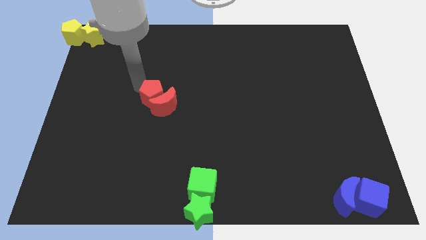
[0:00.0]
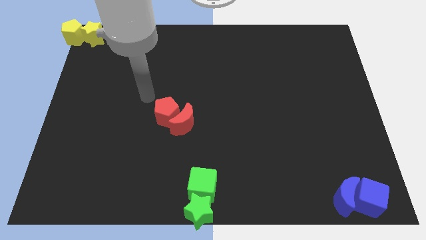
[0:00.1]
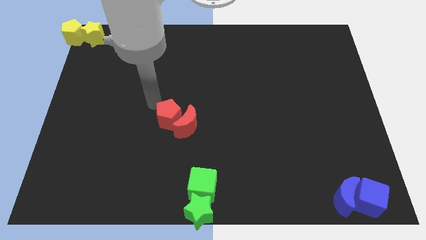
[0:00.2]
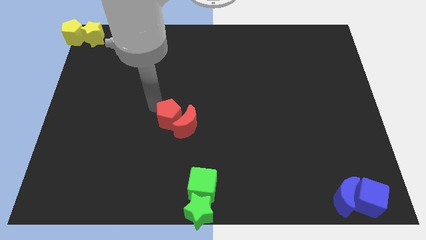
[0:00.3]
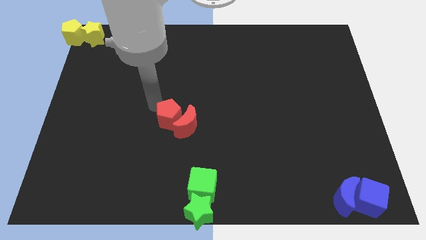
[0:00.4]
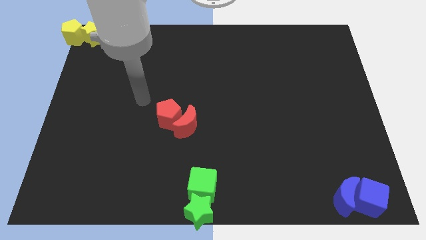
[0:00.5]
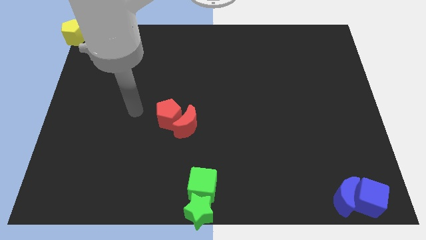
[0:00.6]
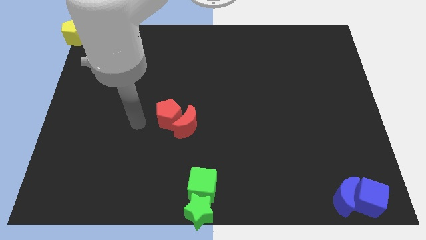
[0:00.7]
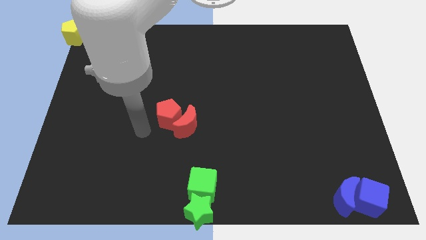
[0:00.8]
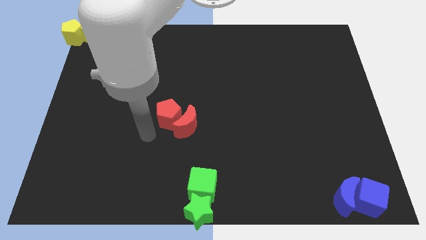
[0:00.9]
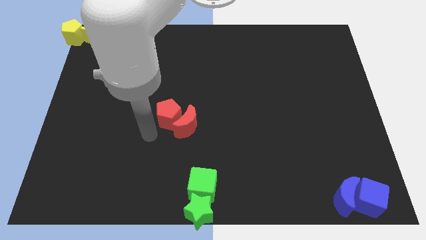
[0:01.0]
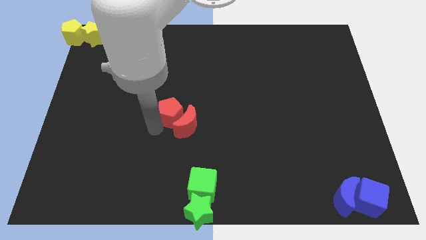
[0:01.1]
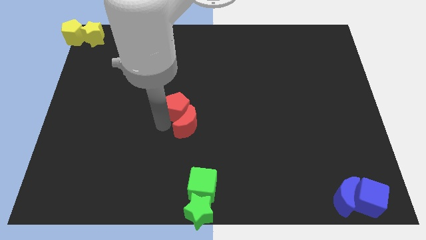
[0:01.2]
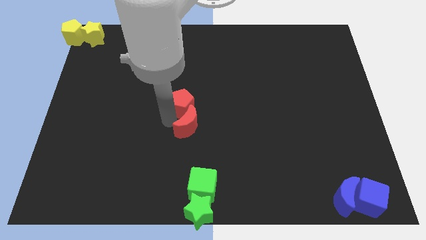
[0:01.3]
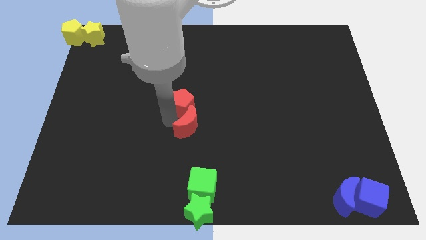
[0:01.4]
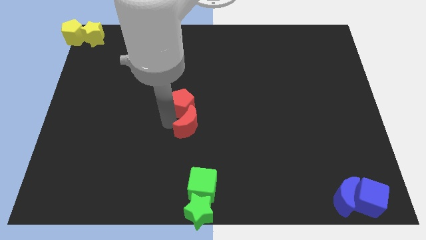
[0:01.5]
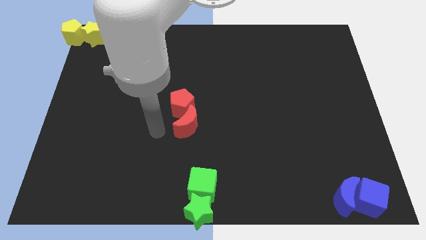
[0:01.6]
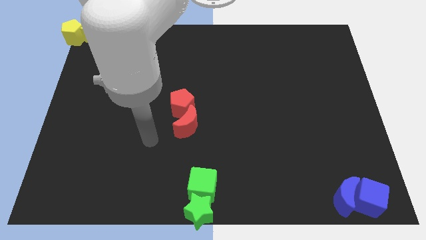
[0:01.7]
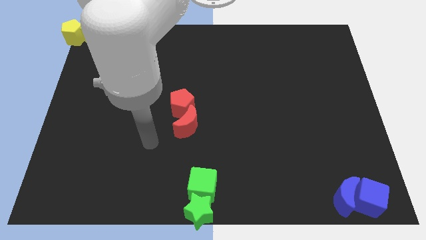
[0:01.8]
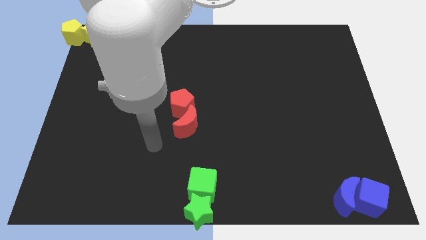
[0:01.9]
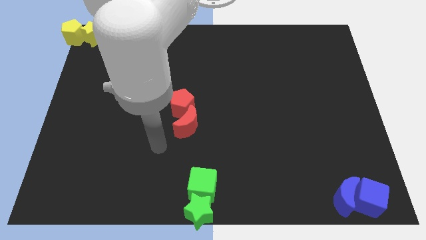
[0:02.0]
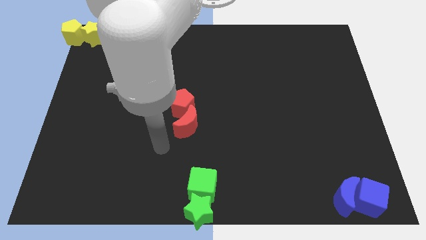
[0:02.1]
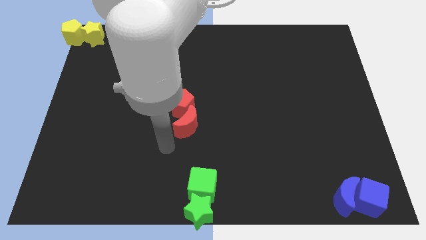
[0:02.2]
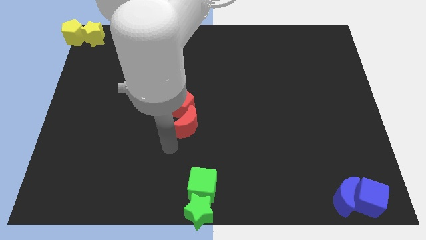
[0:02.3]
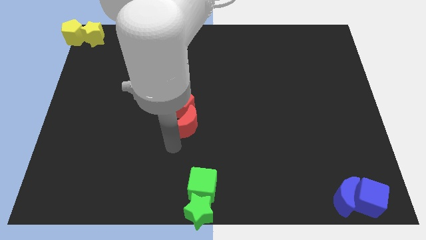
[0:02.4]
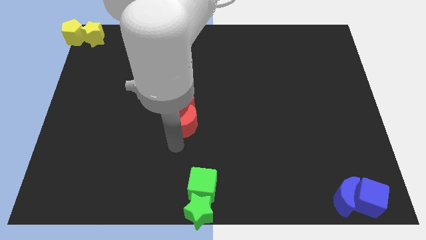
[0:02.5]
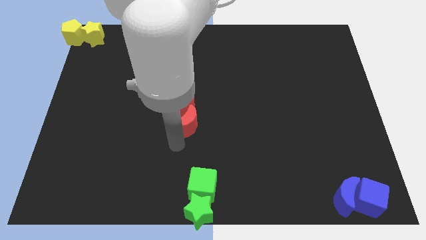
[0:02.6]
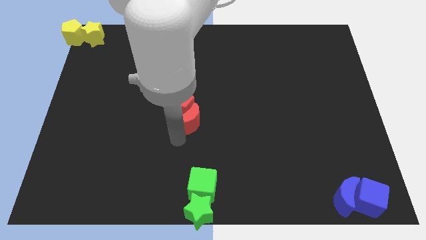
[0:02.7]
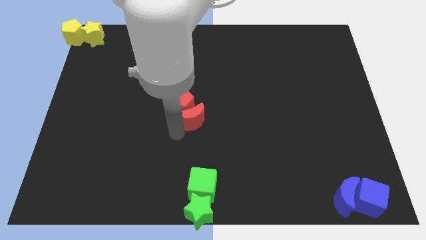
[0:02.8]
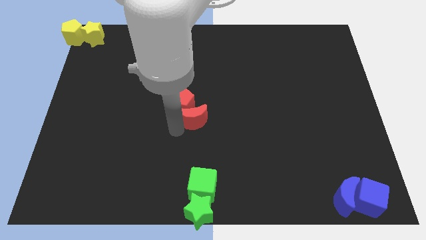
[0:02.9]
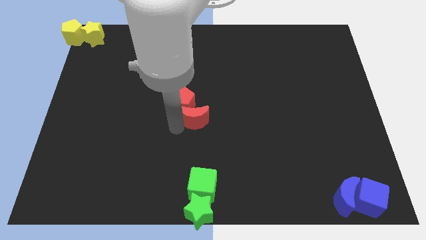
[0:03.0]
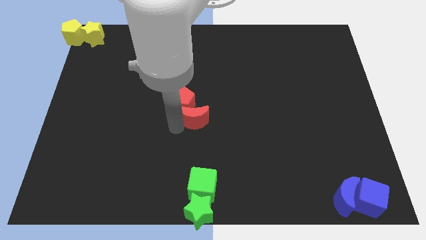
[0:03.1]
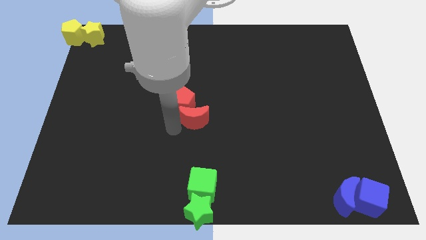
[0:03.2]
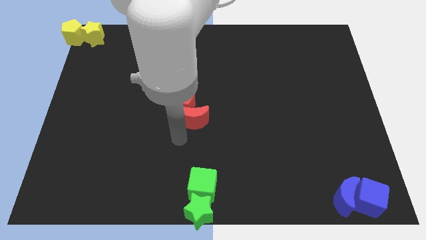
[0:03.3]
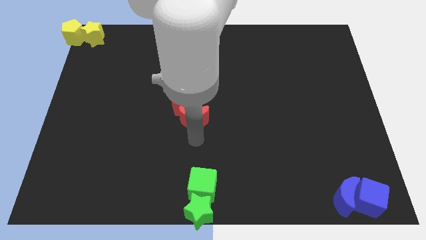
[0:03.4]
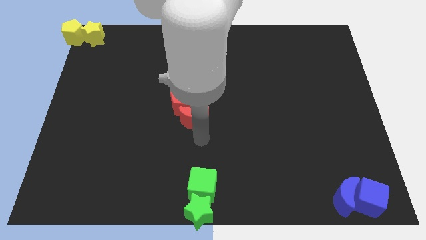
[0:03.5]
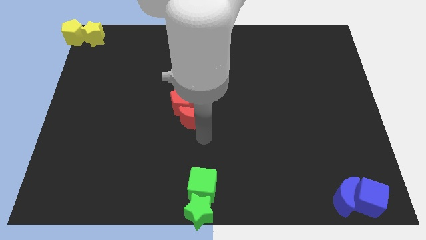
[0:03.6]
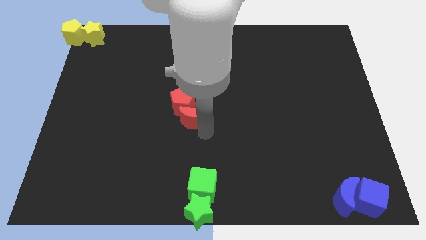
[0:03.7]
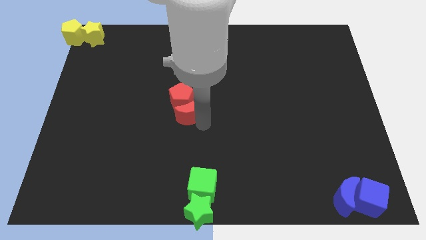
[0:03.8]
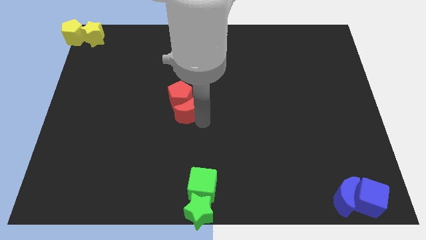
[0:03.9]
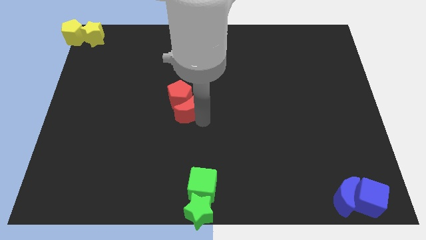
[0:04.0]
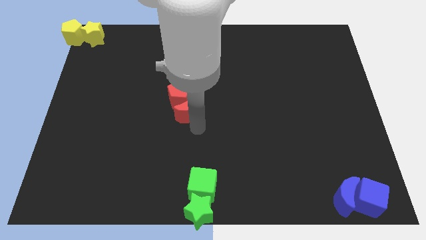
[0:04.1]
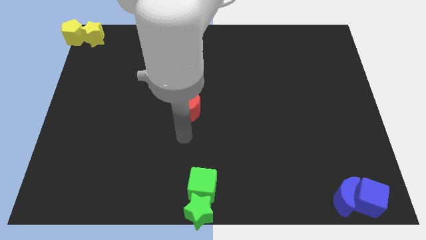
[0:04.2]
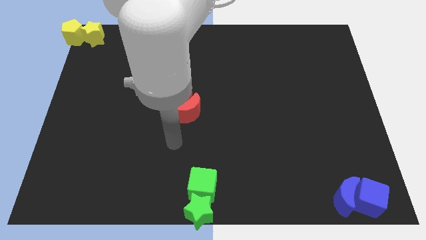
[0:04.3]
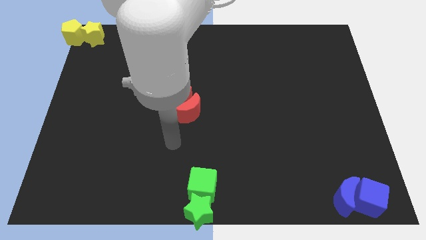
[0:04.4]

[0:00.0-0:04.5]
move the red pentagon along with the red moon upwards

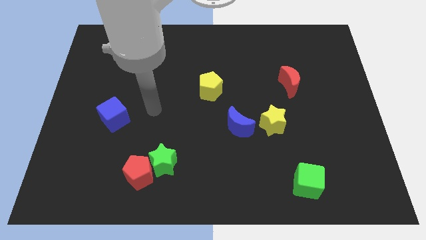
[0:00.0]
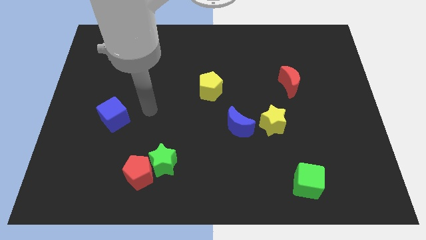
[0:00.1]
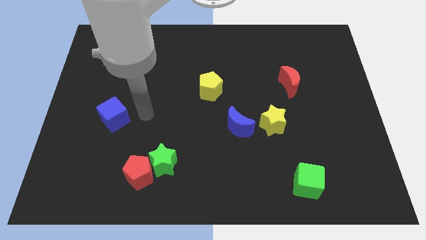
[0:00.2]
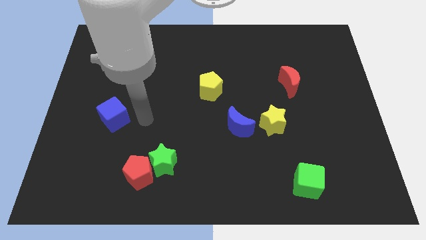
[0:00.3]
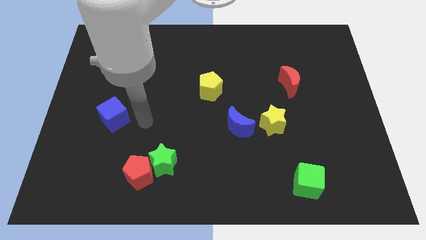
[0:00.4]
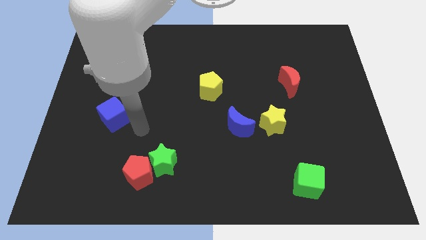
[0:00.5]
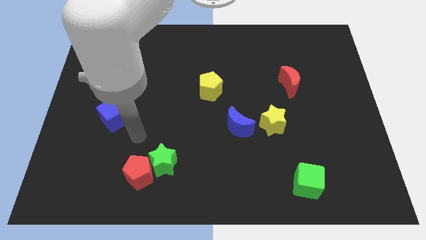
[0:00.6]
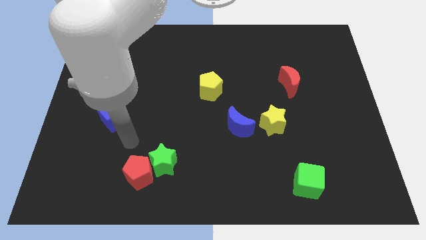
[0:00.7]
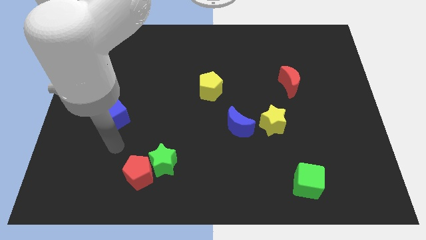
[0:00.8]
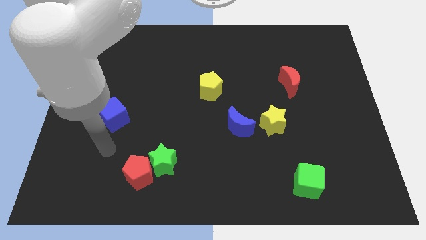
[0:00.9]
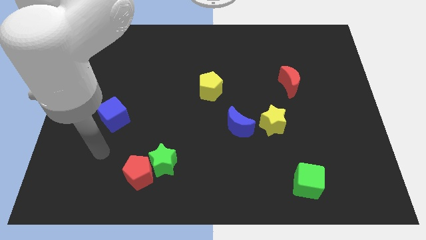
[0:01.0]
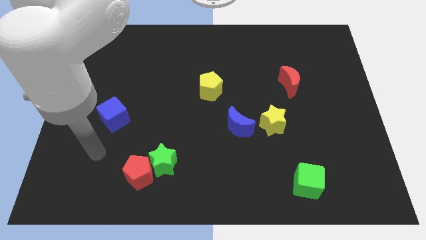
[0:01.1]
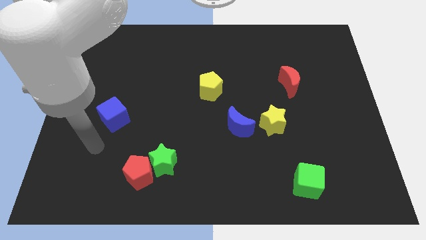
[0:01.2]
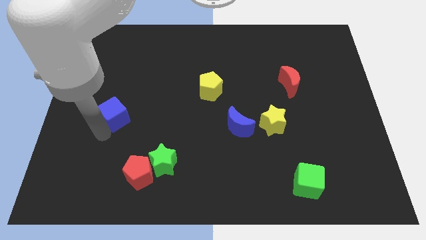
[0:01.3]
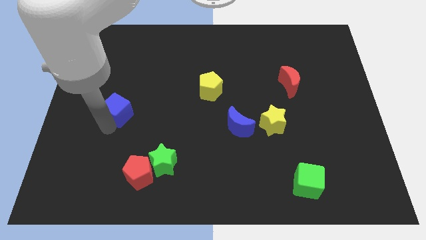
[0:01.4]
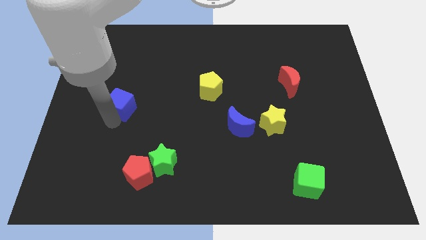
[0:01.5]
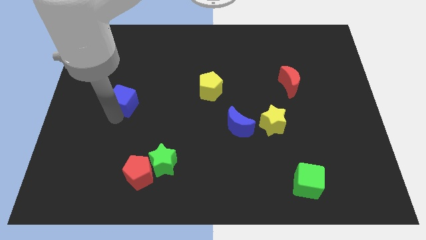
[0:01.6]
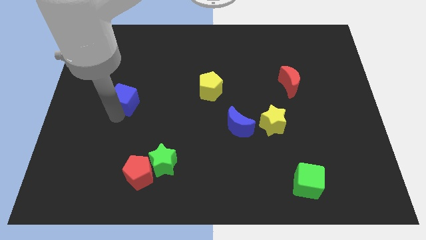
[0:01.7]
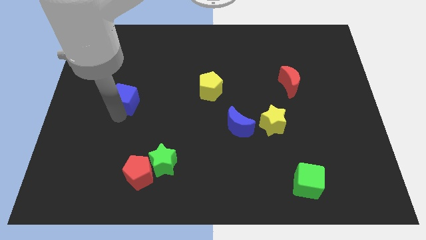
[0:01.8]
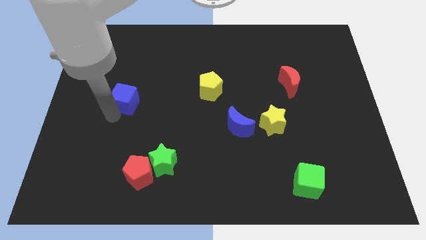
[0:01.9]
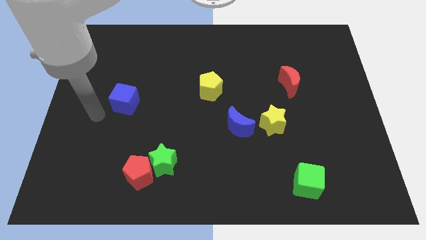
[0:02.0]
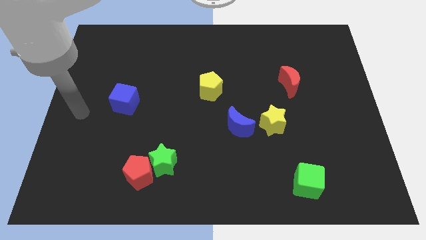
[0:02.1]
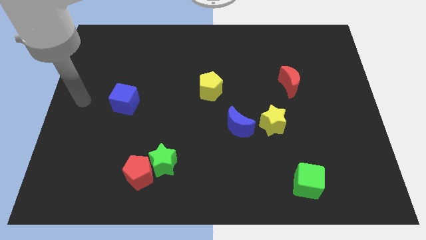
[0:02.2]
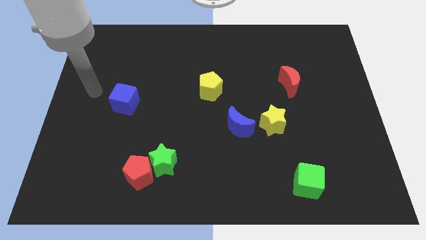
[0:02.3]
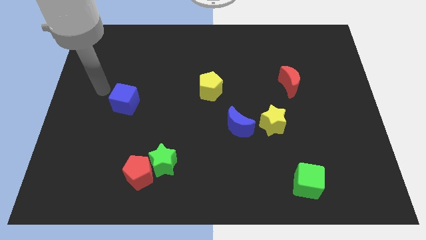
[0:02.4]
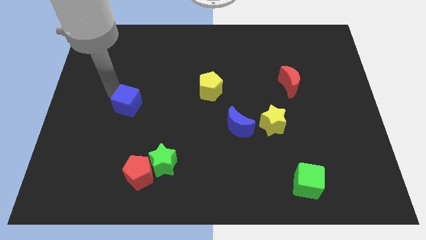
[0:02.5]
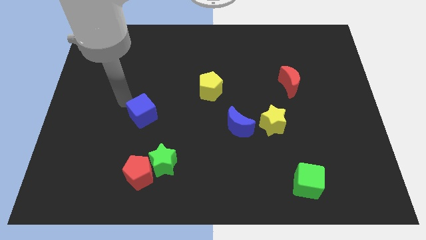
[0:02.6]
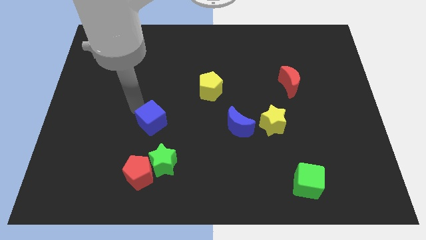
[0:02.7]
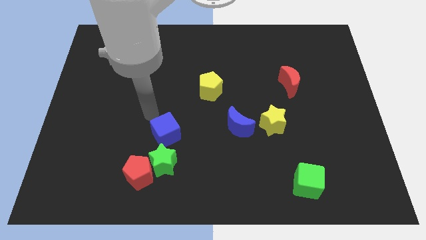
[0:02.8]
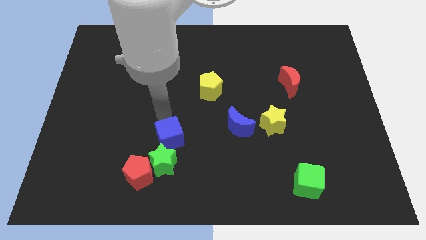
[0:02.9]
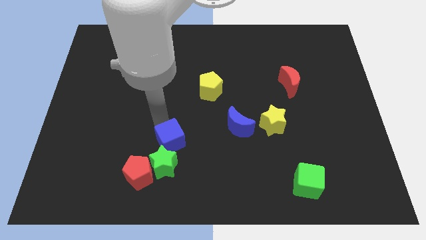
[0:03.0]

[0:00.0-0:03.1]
push blue cube above green star

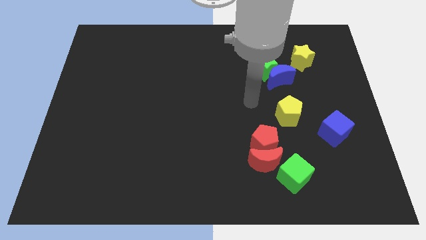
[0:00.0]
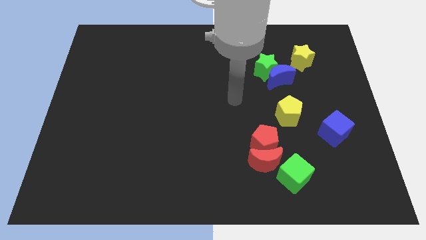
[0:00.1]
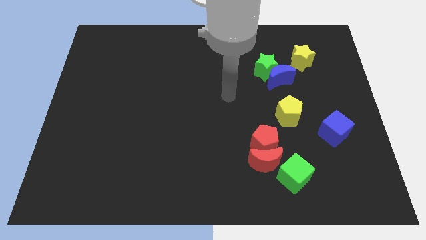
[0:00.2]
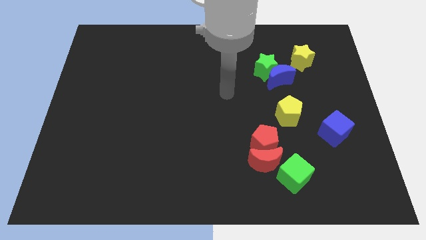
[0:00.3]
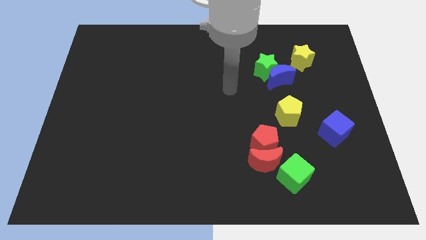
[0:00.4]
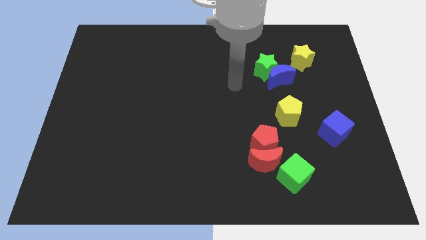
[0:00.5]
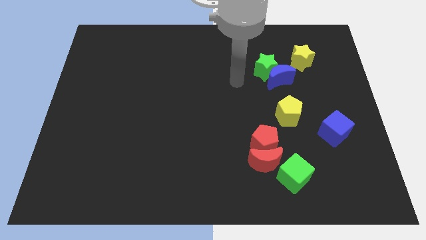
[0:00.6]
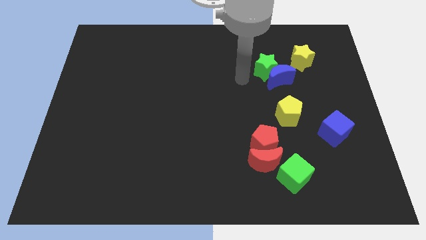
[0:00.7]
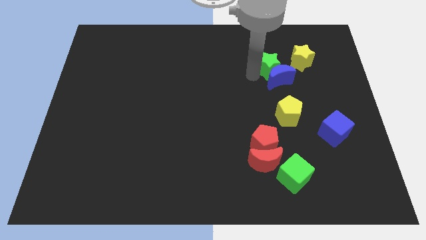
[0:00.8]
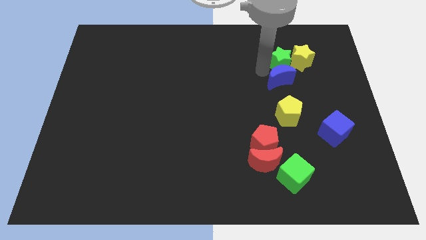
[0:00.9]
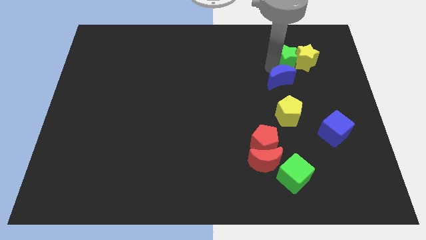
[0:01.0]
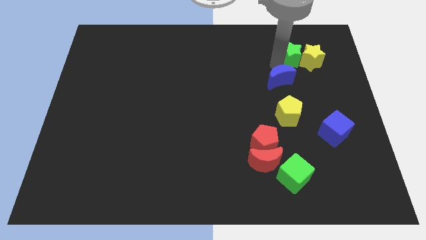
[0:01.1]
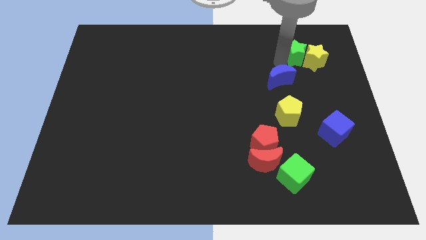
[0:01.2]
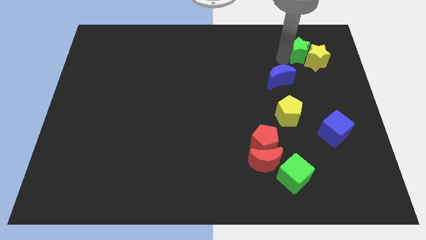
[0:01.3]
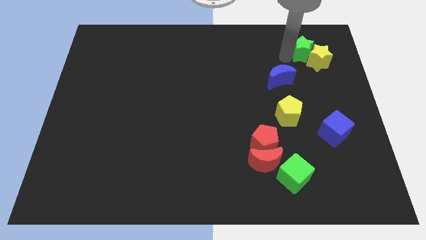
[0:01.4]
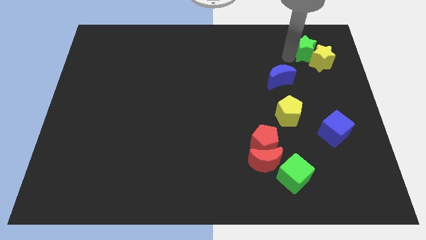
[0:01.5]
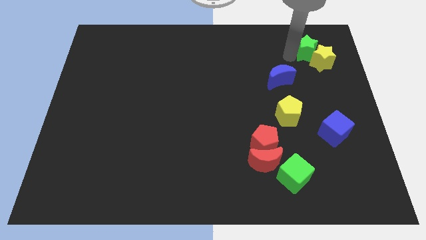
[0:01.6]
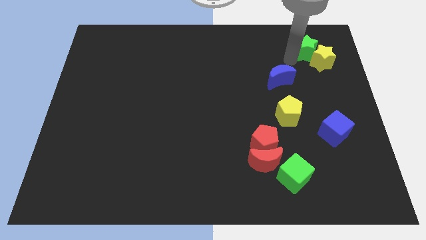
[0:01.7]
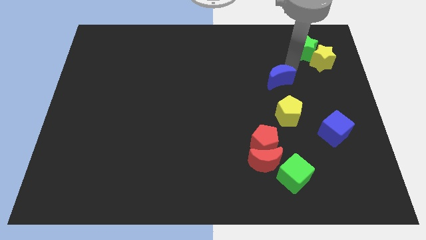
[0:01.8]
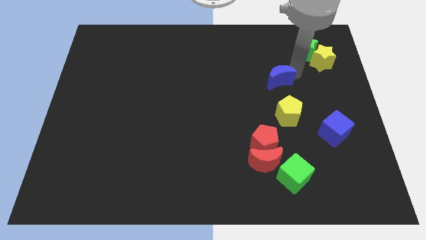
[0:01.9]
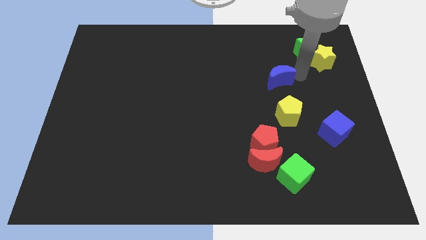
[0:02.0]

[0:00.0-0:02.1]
slide green star close to yellow star
